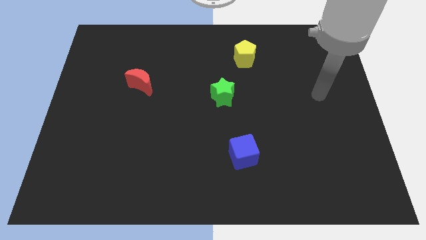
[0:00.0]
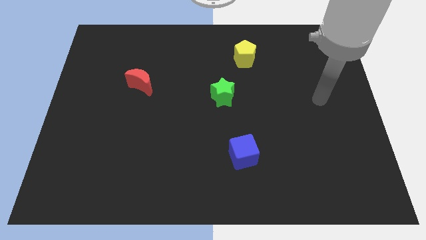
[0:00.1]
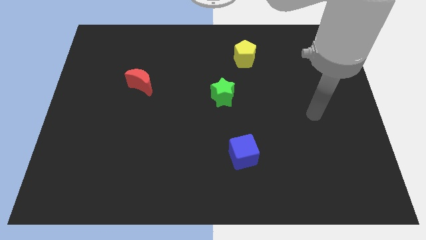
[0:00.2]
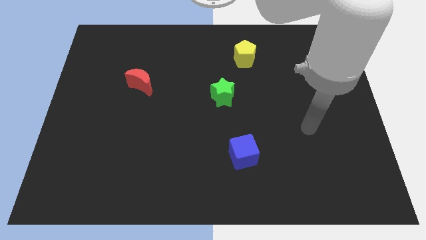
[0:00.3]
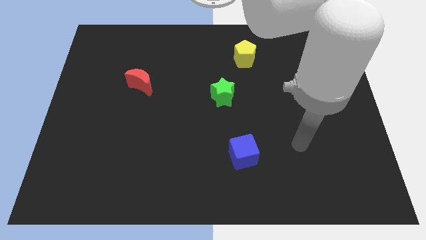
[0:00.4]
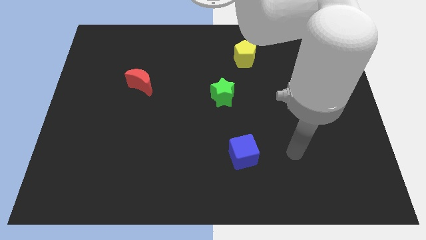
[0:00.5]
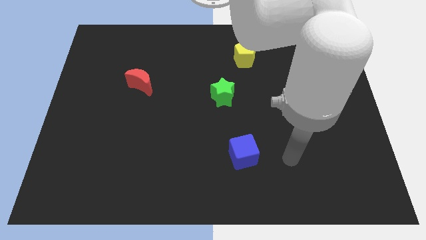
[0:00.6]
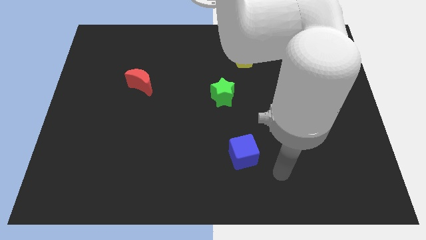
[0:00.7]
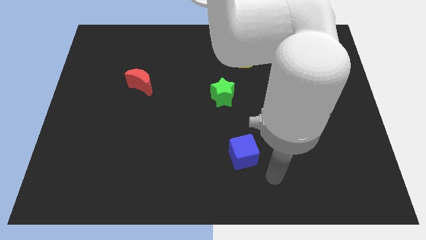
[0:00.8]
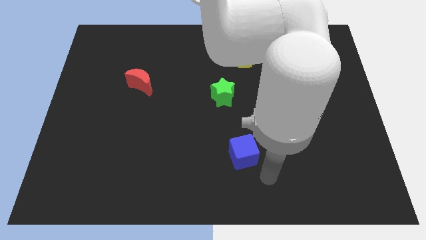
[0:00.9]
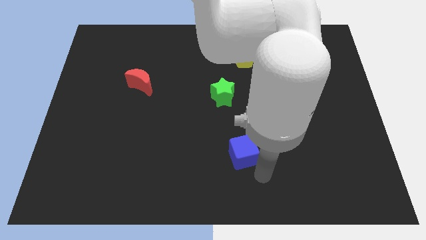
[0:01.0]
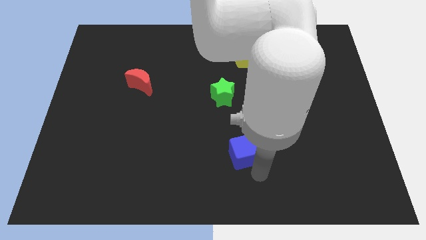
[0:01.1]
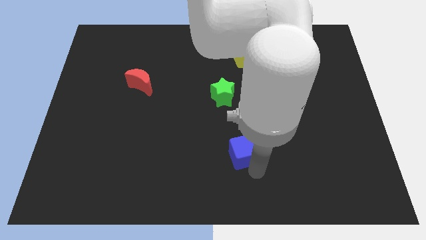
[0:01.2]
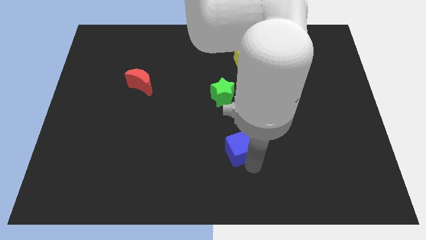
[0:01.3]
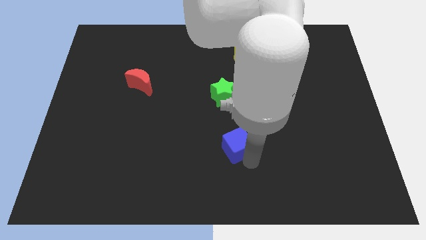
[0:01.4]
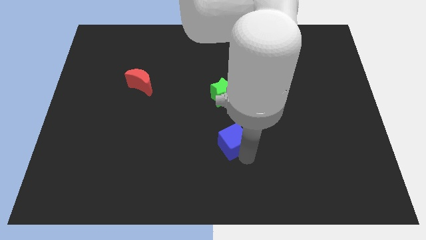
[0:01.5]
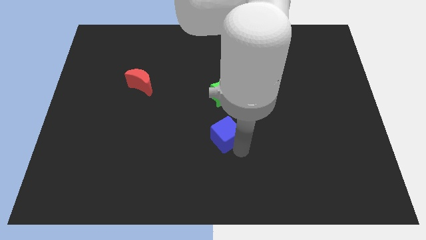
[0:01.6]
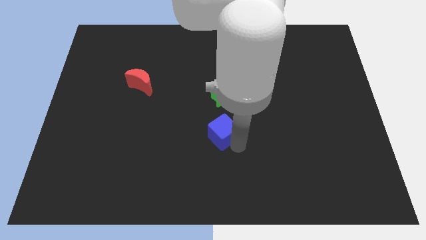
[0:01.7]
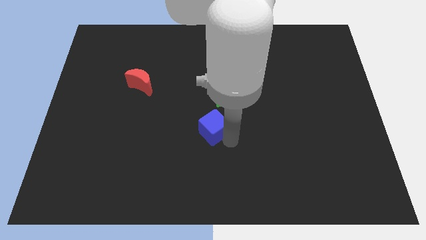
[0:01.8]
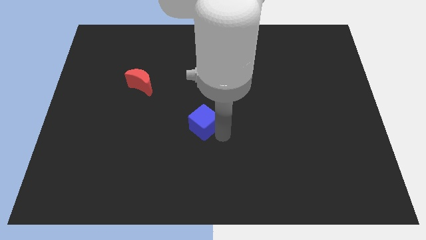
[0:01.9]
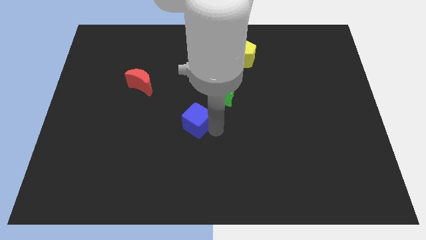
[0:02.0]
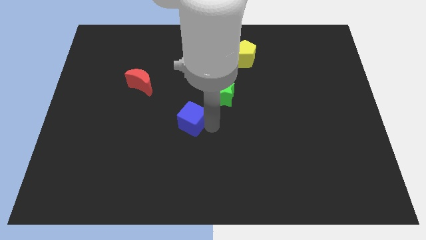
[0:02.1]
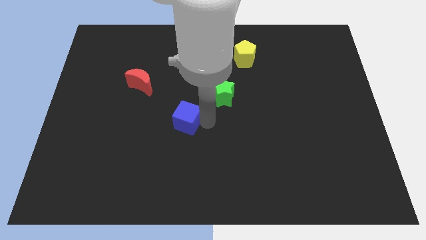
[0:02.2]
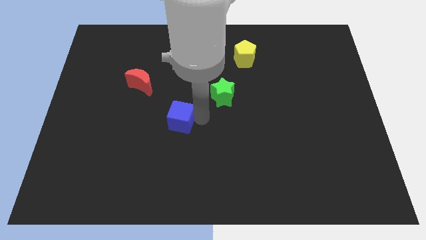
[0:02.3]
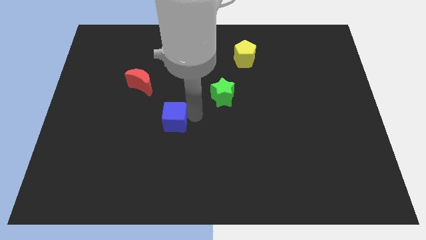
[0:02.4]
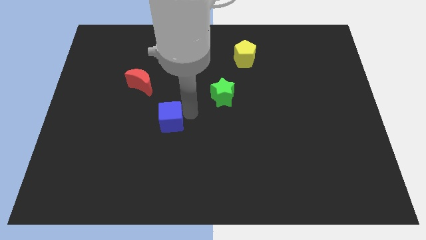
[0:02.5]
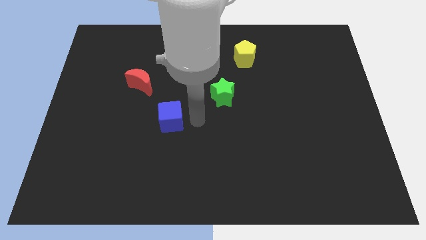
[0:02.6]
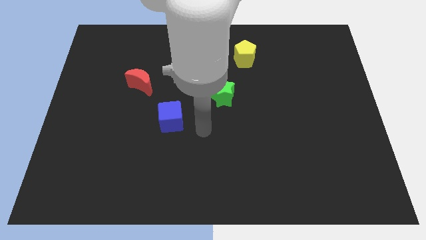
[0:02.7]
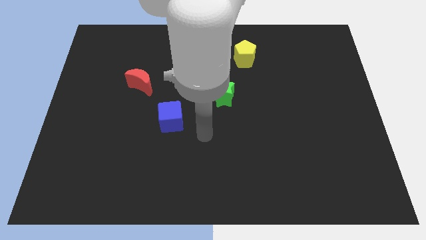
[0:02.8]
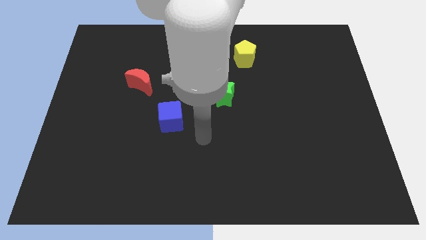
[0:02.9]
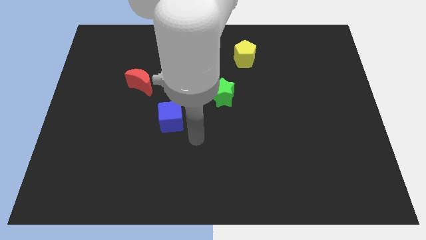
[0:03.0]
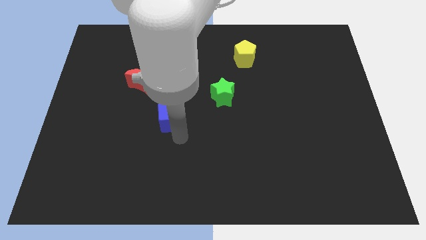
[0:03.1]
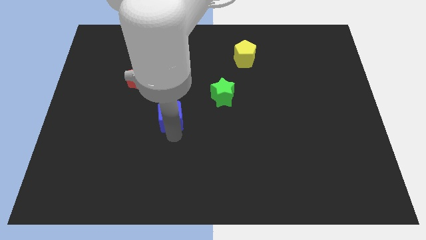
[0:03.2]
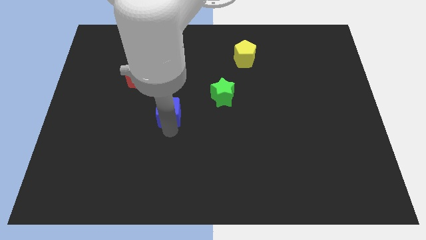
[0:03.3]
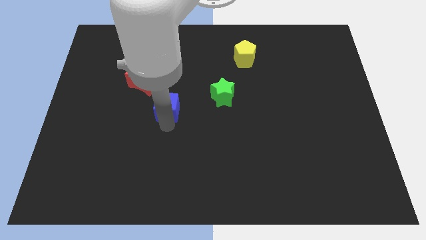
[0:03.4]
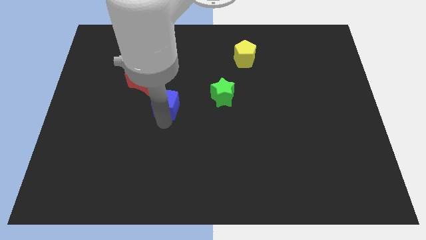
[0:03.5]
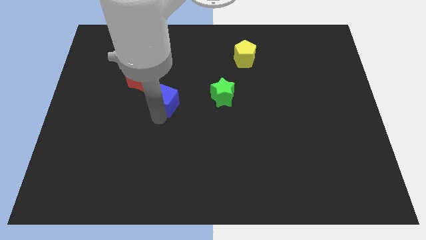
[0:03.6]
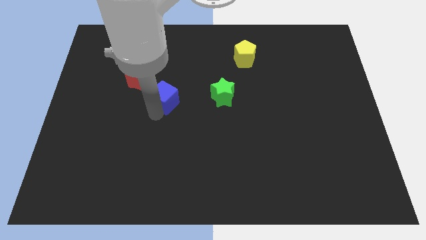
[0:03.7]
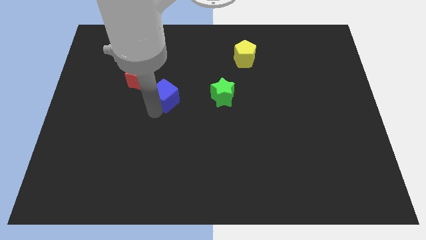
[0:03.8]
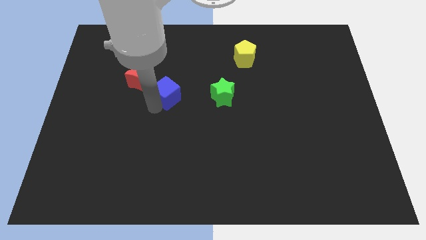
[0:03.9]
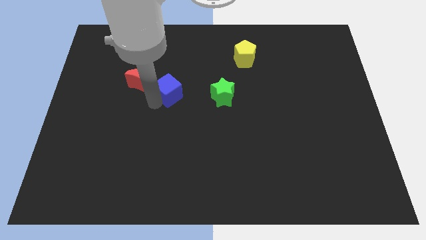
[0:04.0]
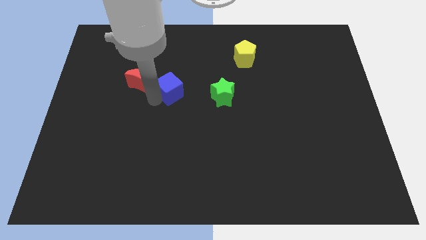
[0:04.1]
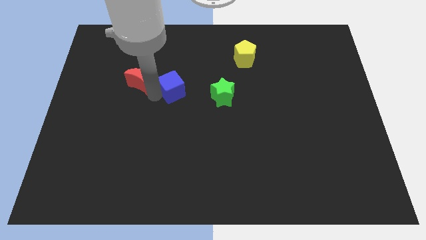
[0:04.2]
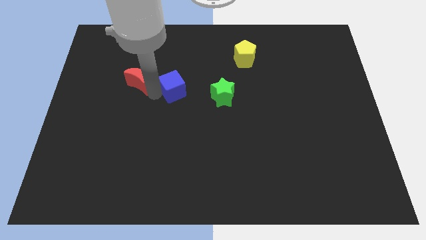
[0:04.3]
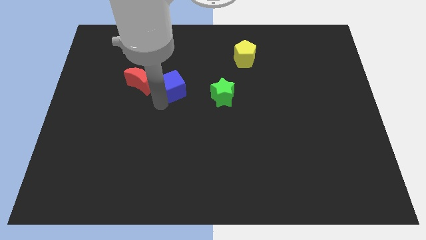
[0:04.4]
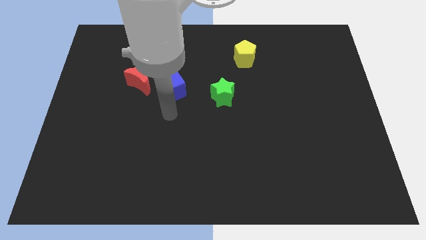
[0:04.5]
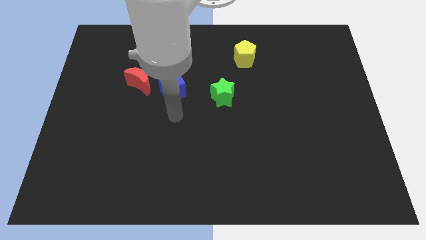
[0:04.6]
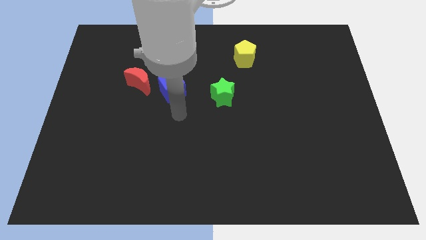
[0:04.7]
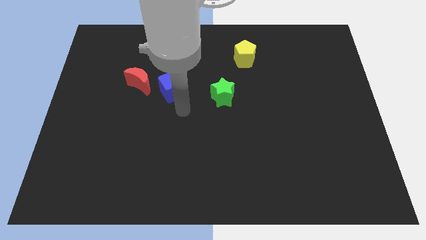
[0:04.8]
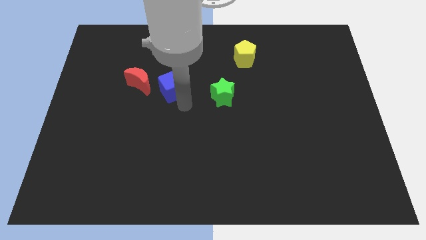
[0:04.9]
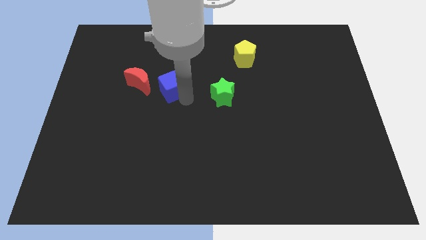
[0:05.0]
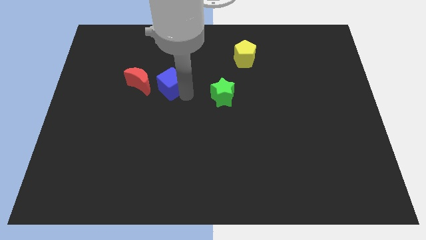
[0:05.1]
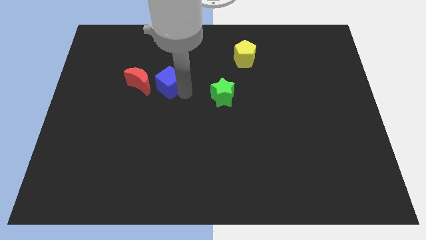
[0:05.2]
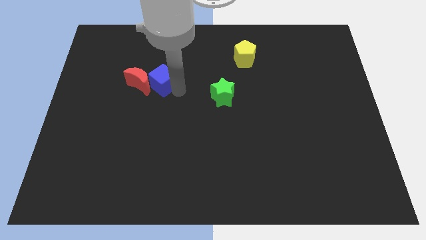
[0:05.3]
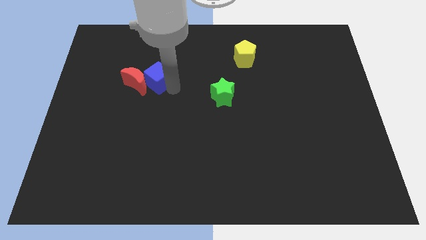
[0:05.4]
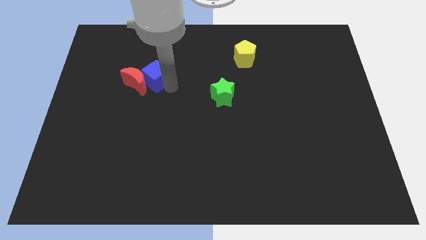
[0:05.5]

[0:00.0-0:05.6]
slide the blue cube towards the red block

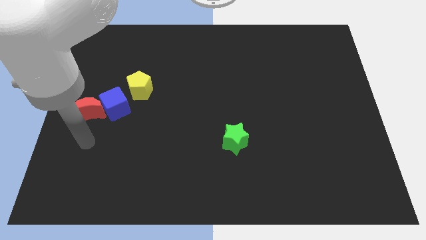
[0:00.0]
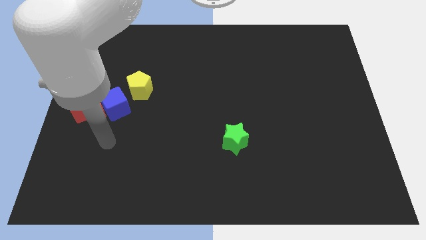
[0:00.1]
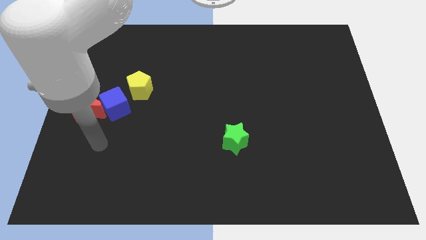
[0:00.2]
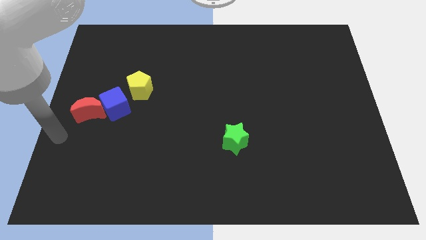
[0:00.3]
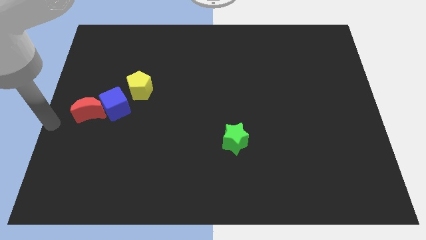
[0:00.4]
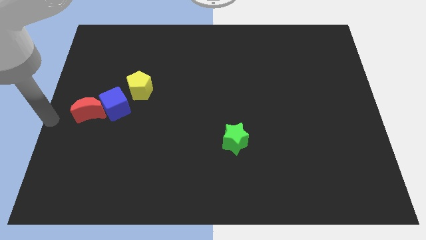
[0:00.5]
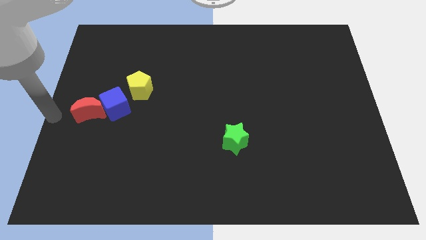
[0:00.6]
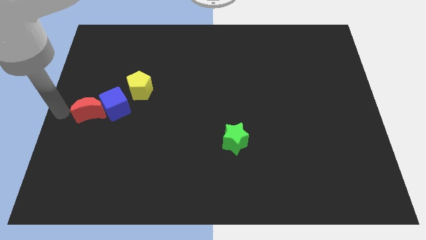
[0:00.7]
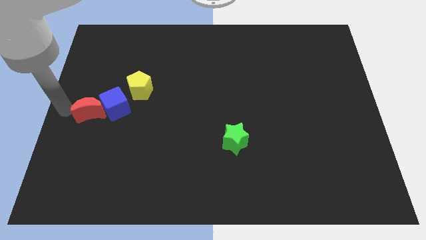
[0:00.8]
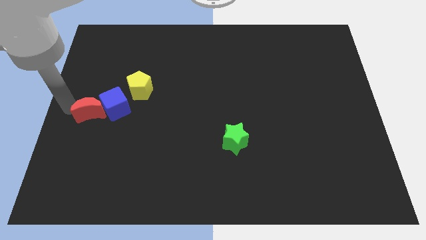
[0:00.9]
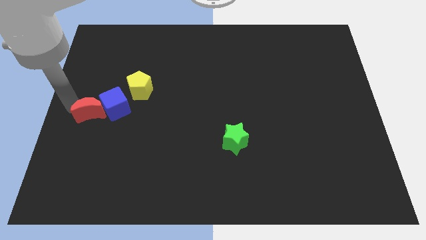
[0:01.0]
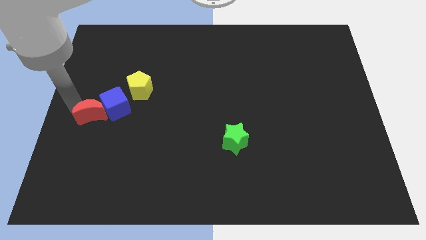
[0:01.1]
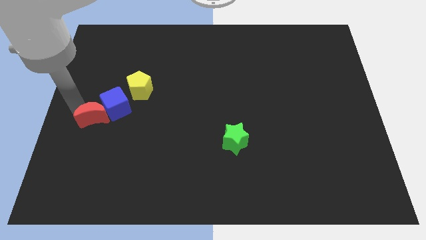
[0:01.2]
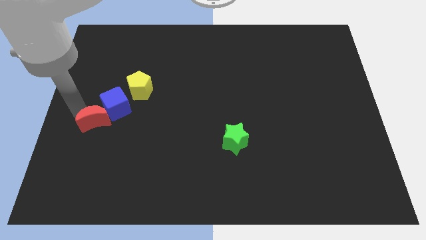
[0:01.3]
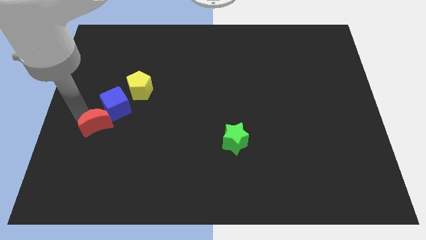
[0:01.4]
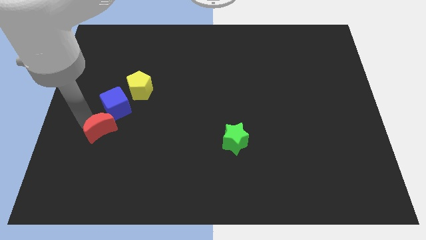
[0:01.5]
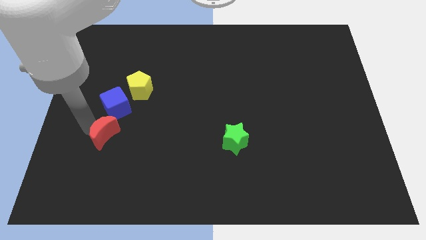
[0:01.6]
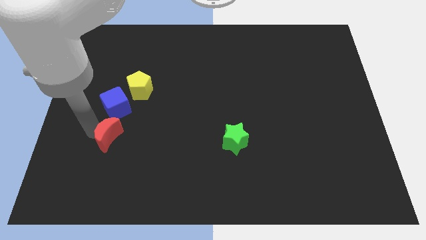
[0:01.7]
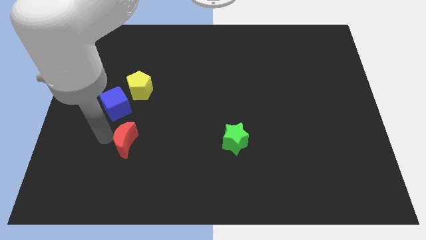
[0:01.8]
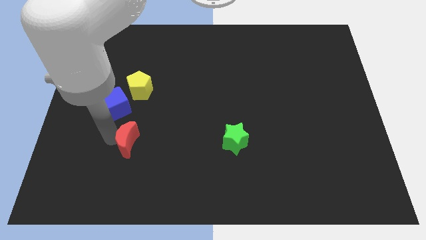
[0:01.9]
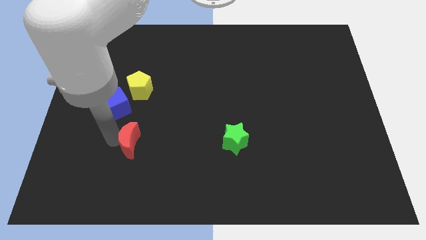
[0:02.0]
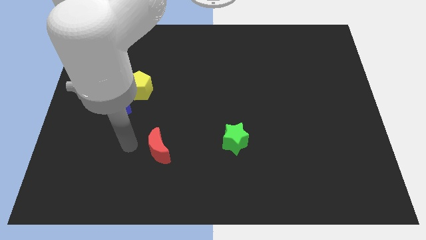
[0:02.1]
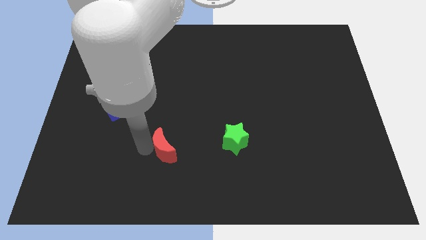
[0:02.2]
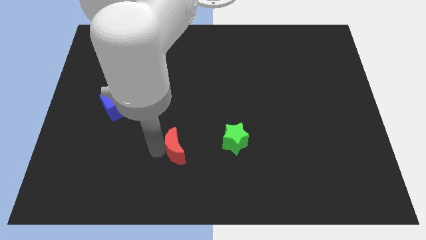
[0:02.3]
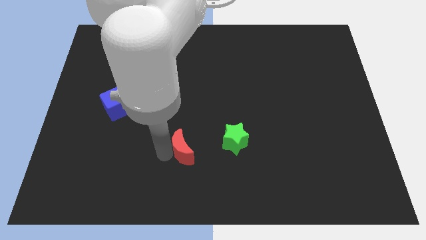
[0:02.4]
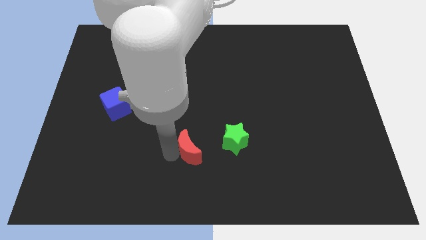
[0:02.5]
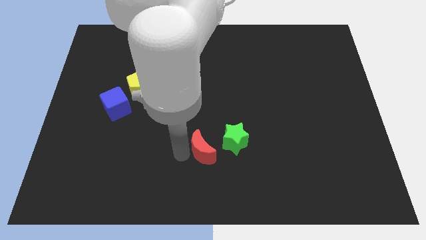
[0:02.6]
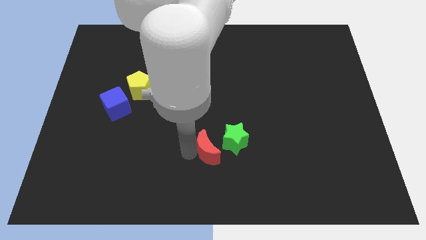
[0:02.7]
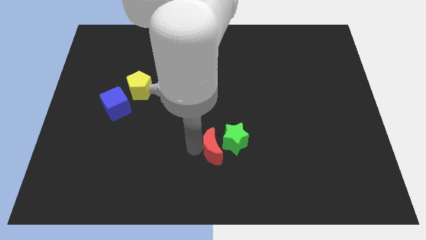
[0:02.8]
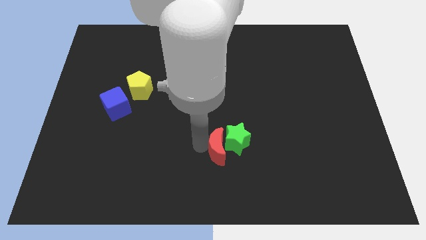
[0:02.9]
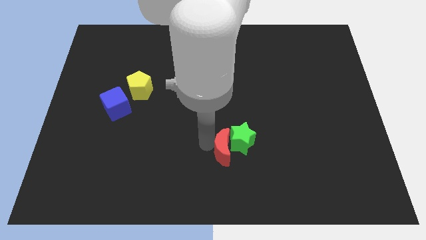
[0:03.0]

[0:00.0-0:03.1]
put the red block next to the green star
